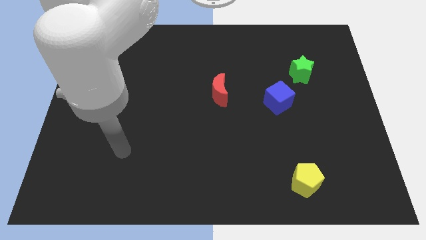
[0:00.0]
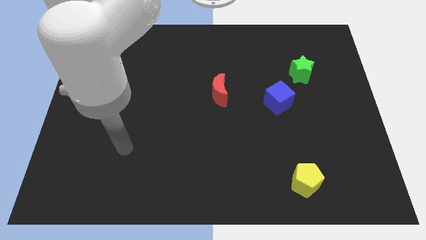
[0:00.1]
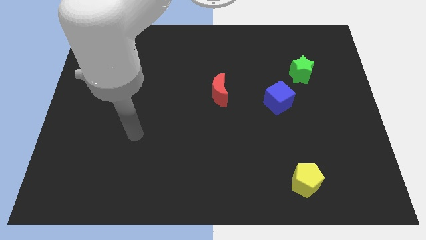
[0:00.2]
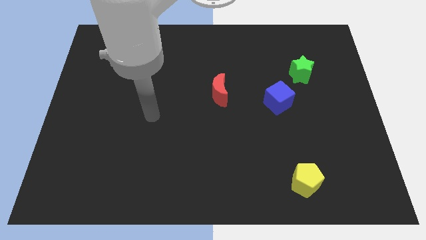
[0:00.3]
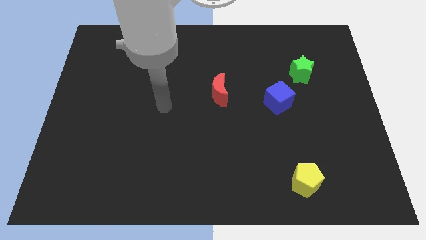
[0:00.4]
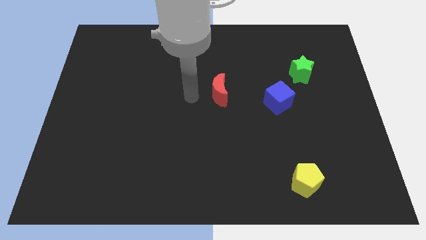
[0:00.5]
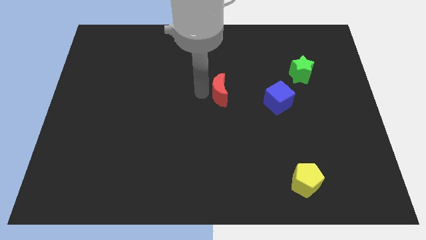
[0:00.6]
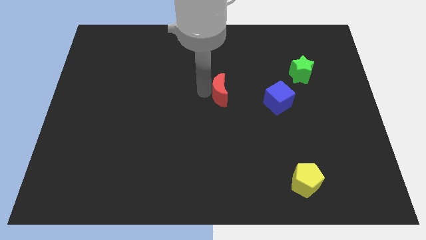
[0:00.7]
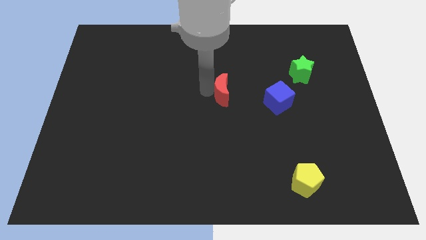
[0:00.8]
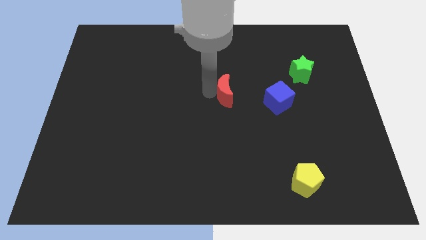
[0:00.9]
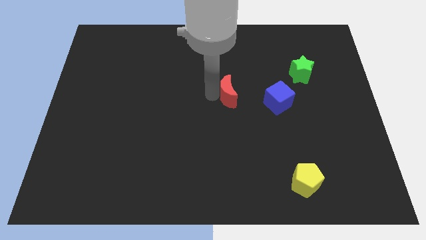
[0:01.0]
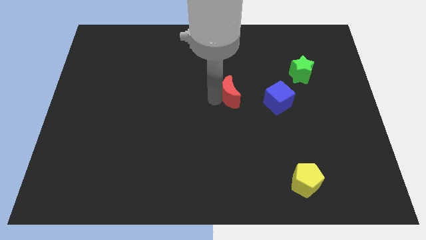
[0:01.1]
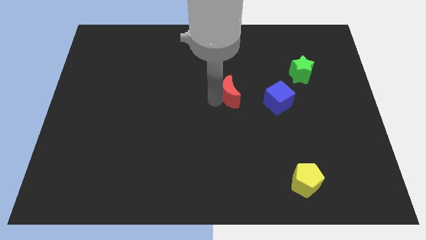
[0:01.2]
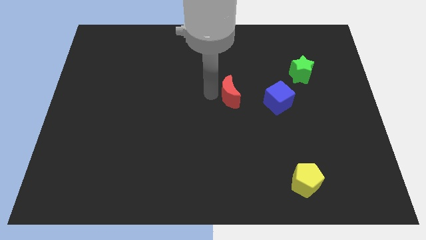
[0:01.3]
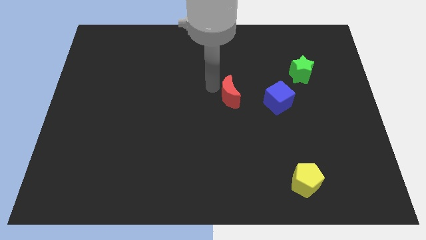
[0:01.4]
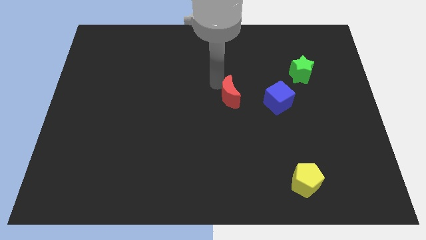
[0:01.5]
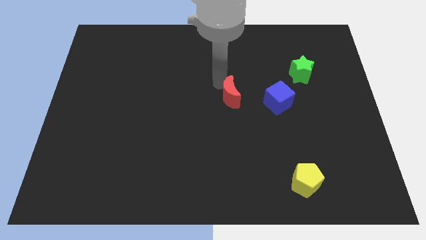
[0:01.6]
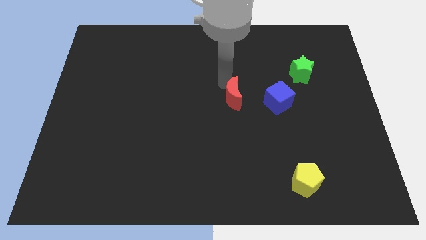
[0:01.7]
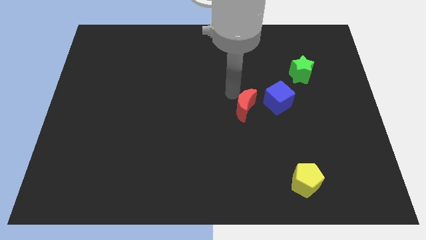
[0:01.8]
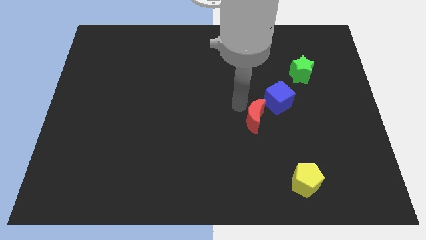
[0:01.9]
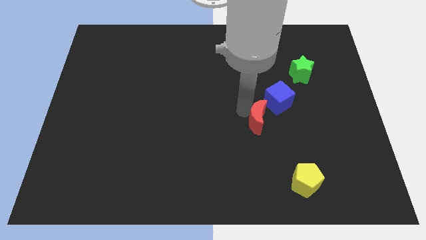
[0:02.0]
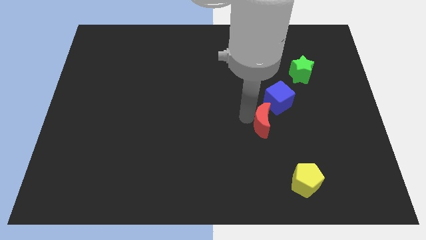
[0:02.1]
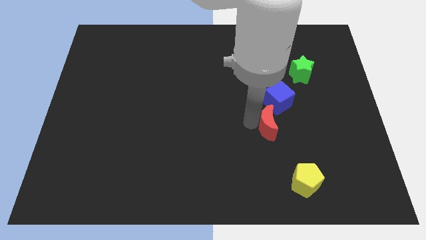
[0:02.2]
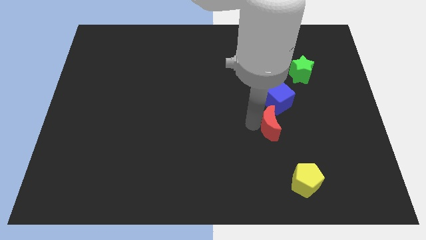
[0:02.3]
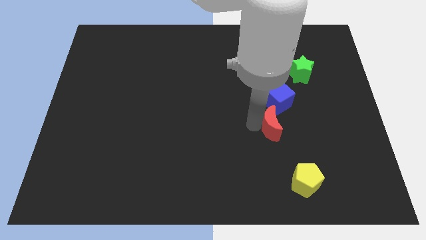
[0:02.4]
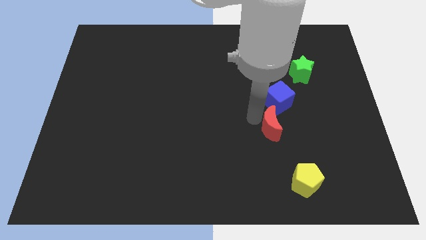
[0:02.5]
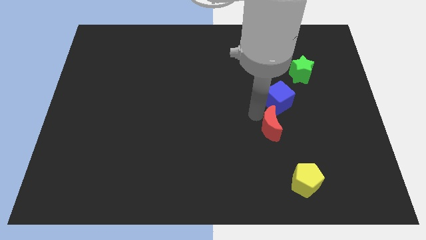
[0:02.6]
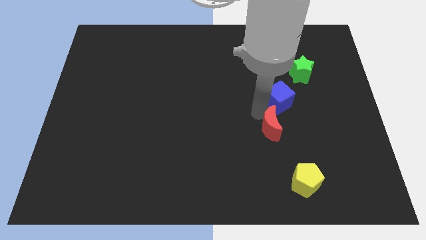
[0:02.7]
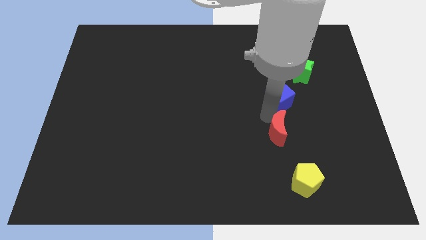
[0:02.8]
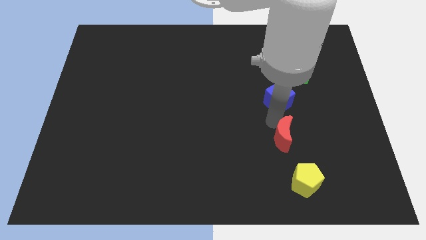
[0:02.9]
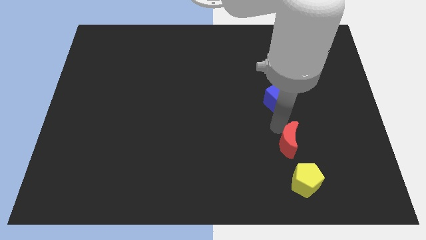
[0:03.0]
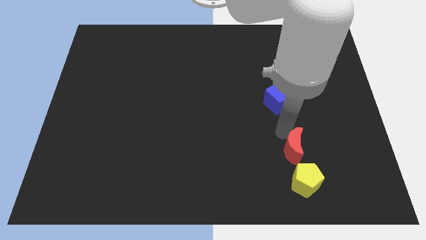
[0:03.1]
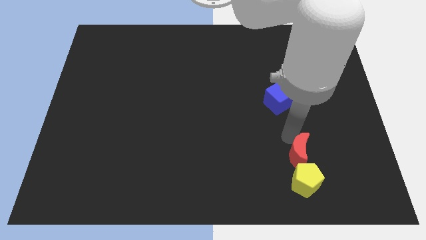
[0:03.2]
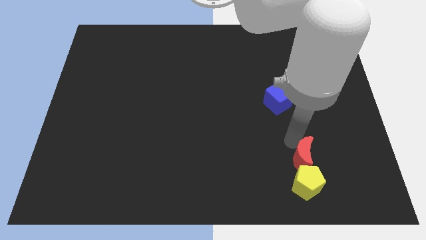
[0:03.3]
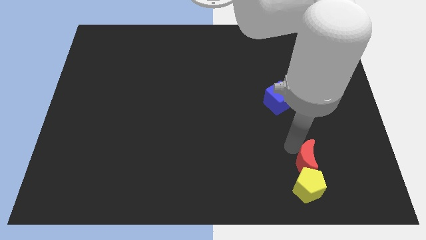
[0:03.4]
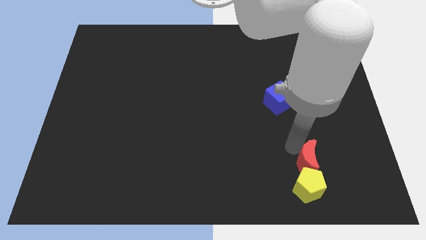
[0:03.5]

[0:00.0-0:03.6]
push the red moon to the pentagon

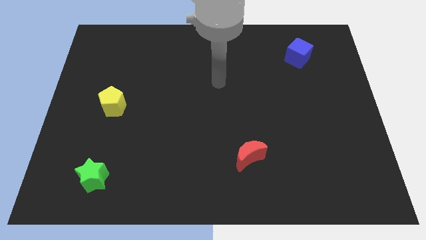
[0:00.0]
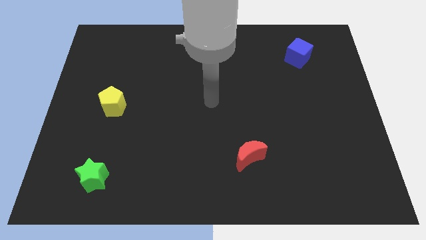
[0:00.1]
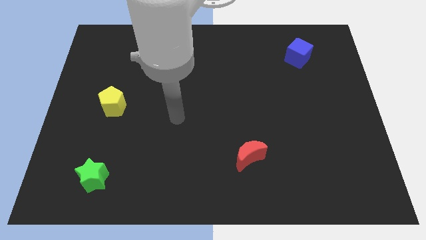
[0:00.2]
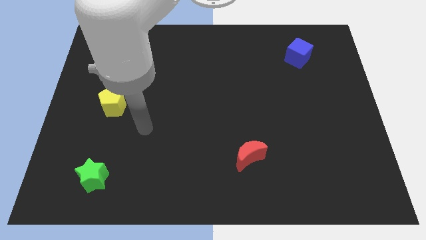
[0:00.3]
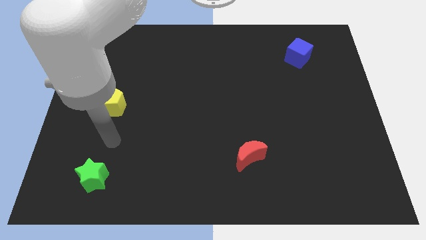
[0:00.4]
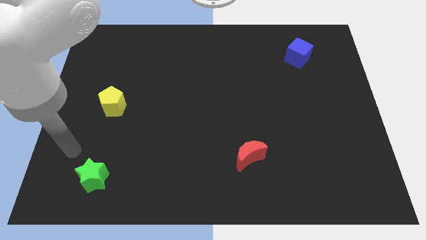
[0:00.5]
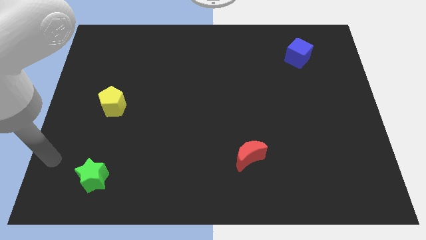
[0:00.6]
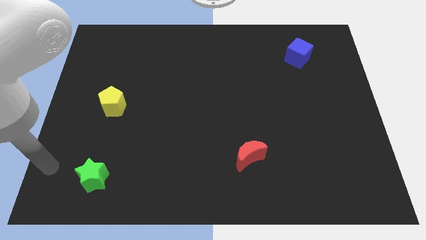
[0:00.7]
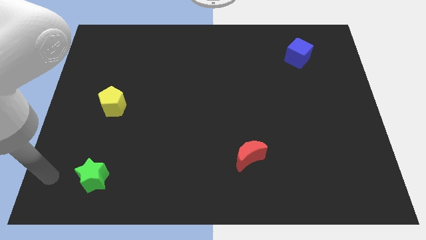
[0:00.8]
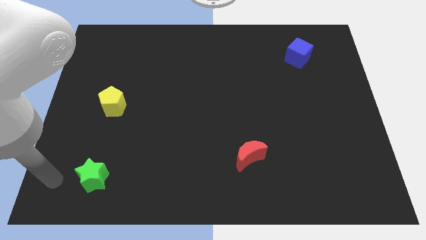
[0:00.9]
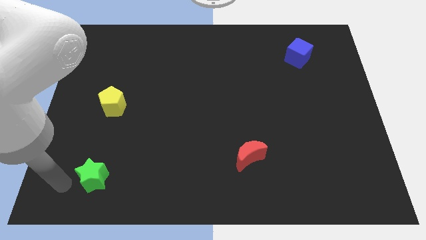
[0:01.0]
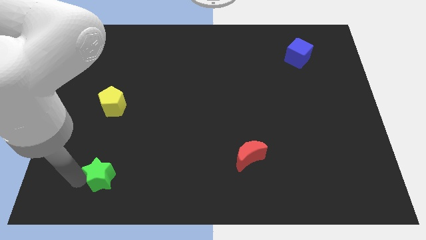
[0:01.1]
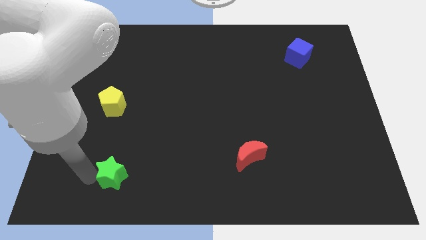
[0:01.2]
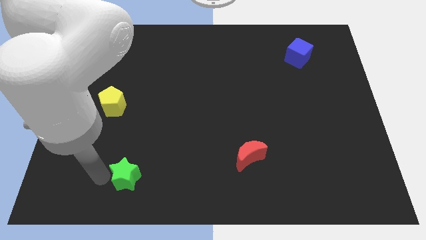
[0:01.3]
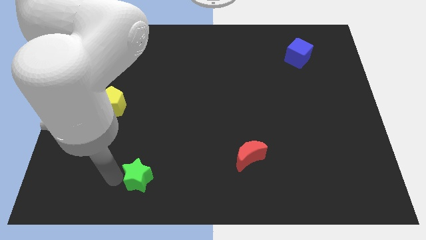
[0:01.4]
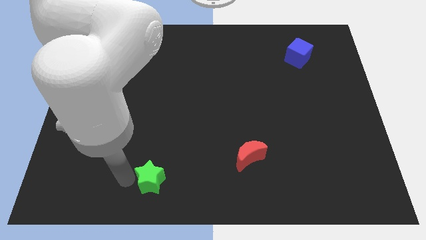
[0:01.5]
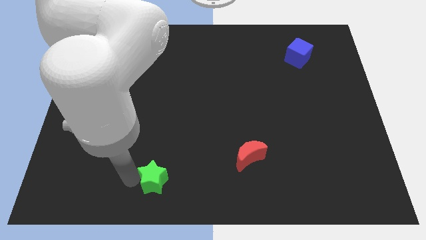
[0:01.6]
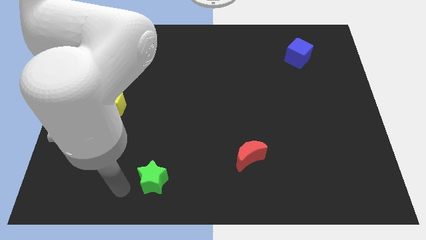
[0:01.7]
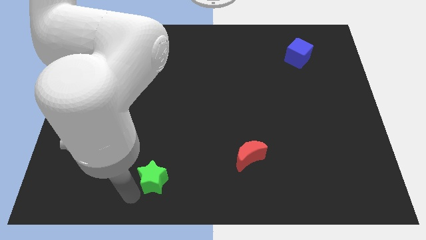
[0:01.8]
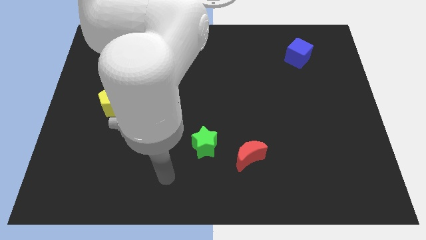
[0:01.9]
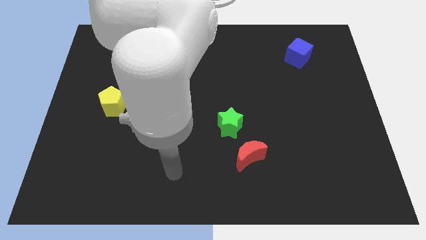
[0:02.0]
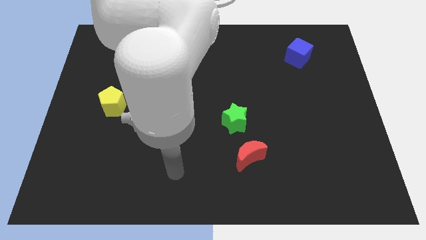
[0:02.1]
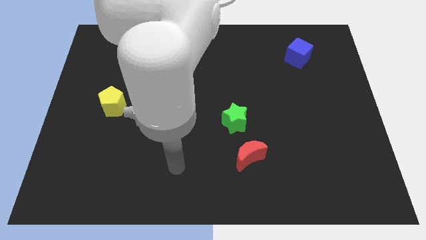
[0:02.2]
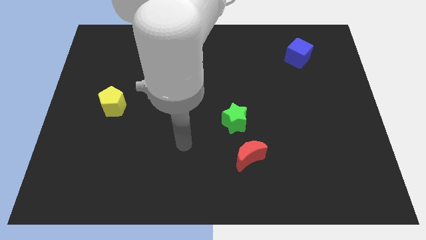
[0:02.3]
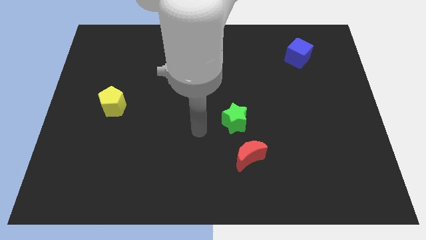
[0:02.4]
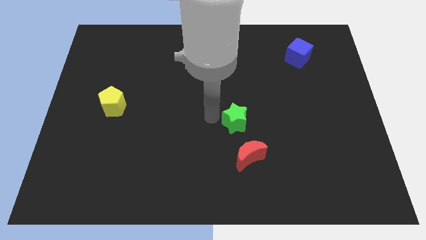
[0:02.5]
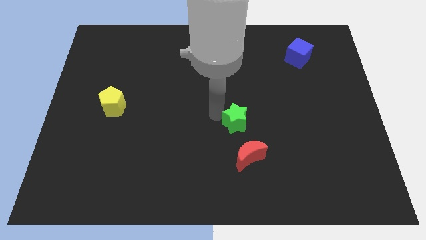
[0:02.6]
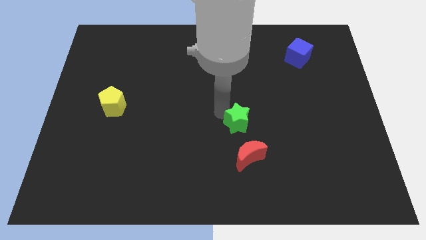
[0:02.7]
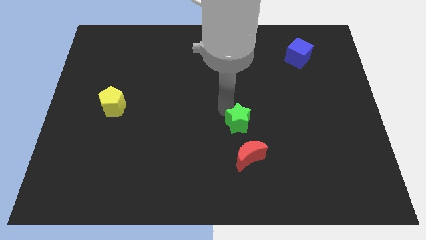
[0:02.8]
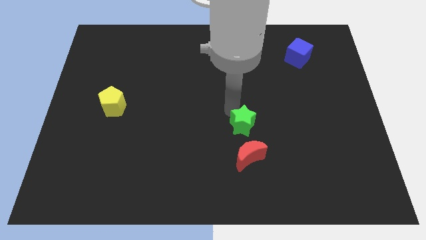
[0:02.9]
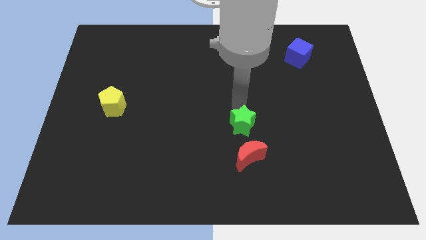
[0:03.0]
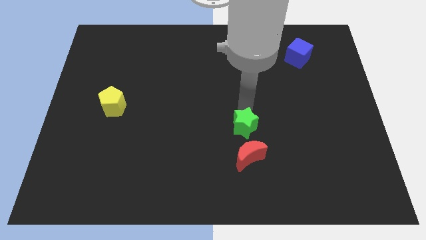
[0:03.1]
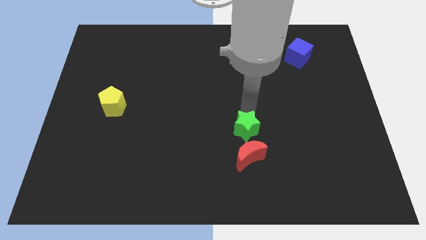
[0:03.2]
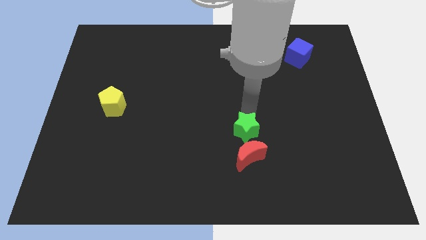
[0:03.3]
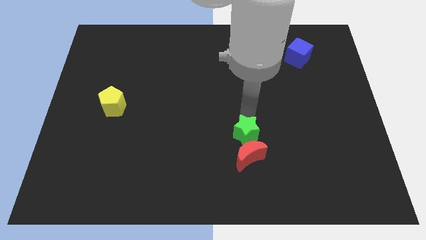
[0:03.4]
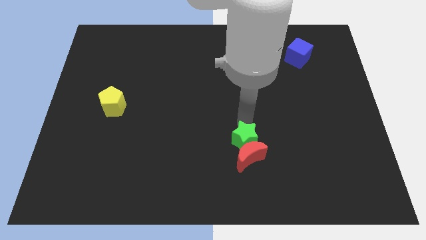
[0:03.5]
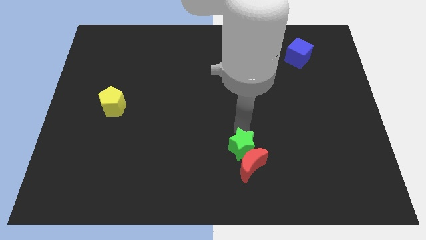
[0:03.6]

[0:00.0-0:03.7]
put the star to the moon

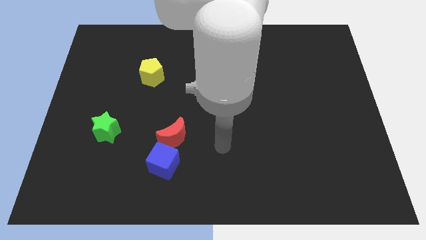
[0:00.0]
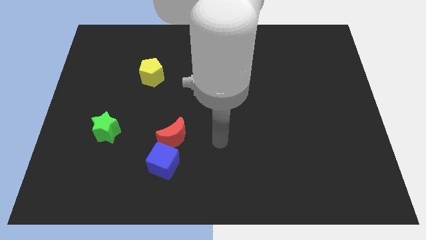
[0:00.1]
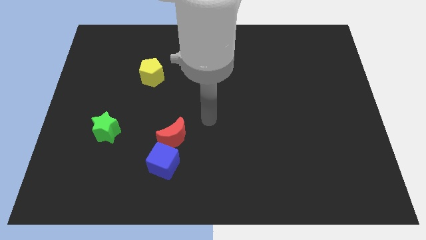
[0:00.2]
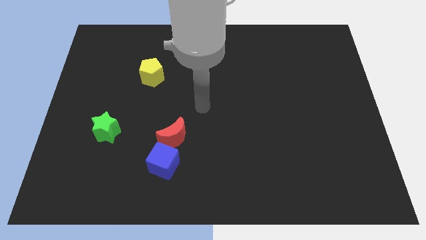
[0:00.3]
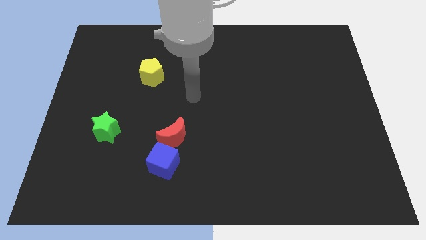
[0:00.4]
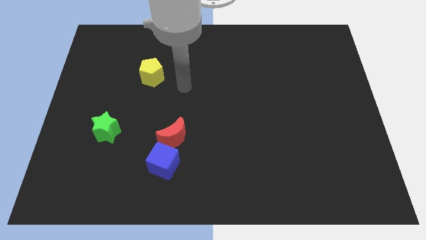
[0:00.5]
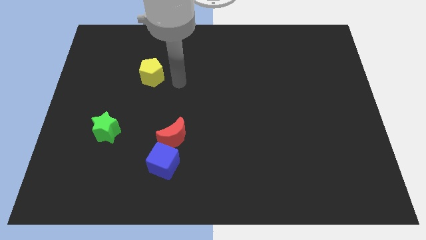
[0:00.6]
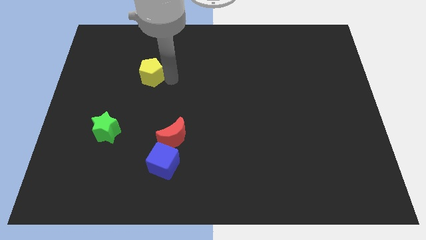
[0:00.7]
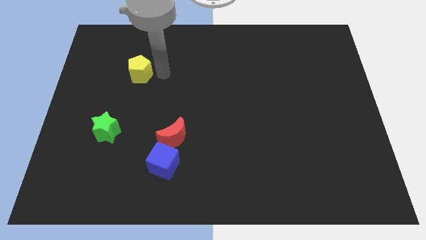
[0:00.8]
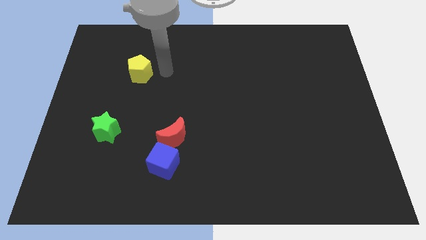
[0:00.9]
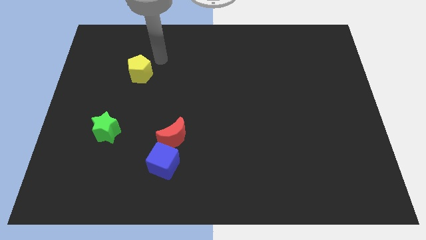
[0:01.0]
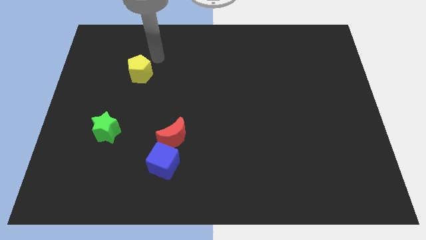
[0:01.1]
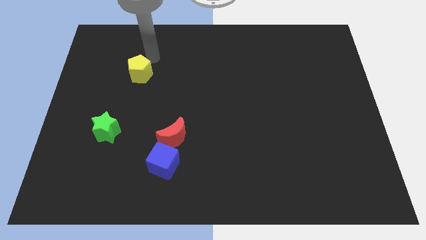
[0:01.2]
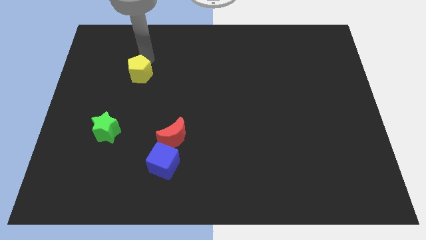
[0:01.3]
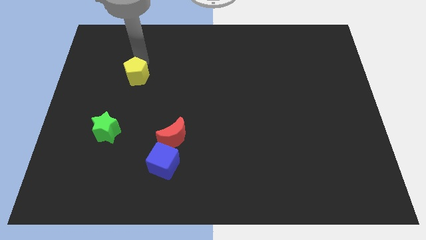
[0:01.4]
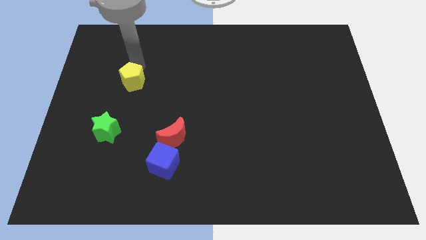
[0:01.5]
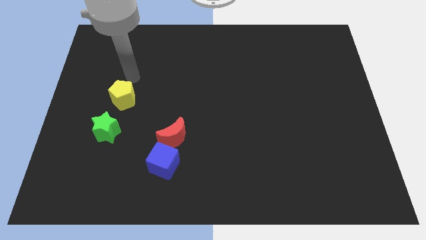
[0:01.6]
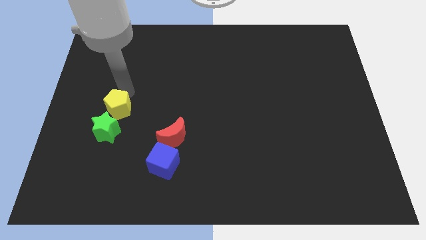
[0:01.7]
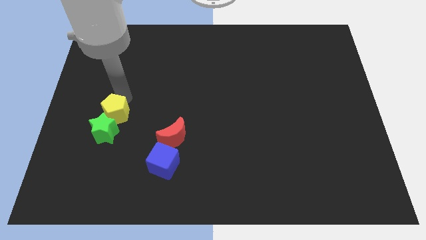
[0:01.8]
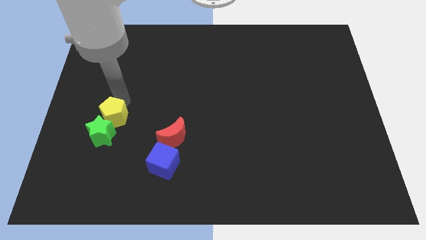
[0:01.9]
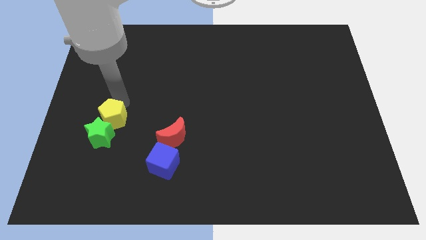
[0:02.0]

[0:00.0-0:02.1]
put the pentagon next to the green star
